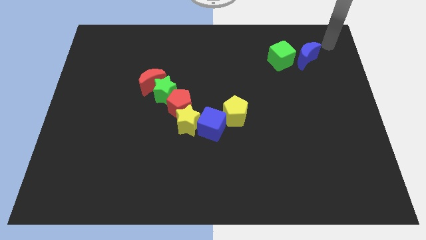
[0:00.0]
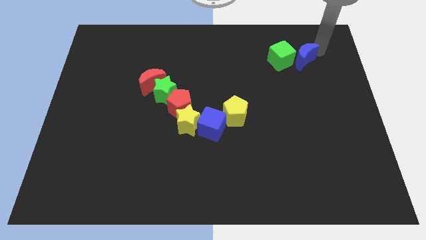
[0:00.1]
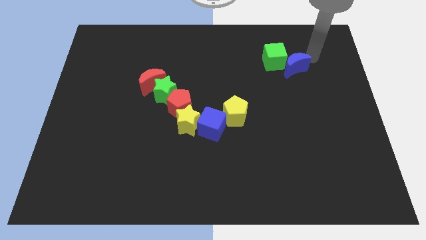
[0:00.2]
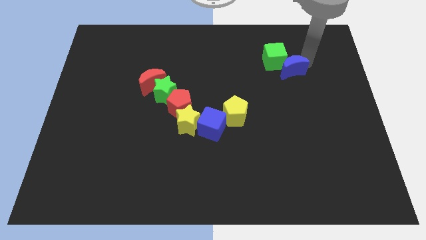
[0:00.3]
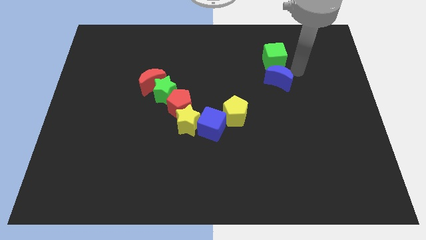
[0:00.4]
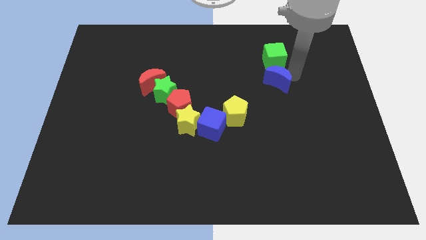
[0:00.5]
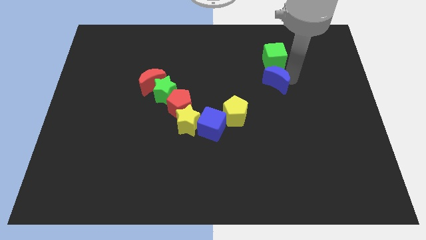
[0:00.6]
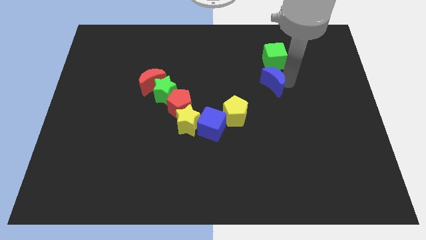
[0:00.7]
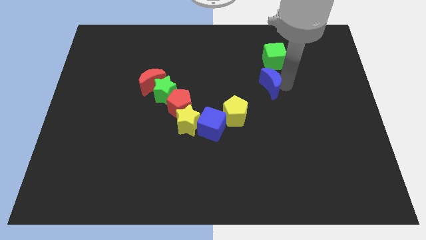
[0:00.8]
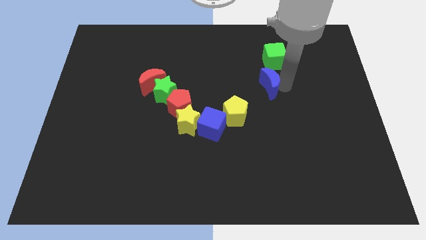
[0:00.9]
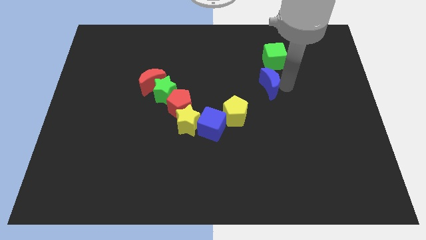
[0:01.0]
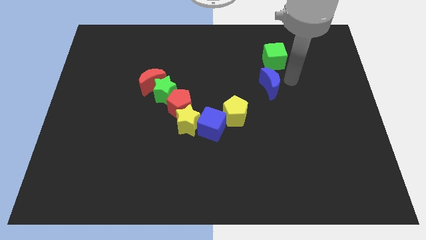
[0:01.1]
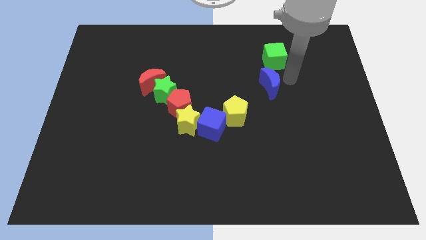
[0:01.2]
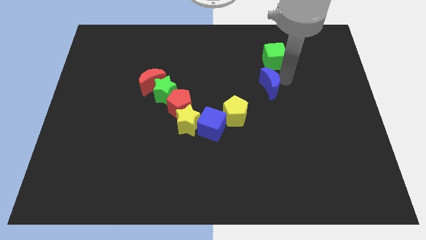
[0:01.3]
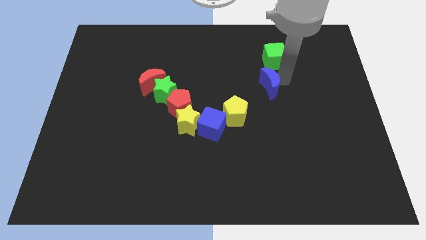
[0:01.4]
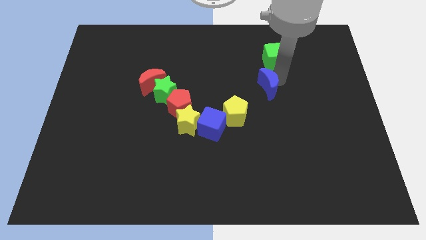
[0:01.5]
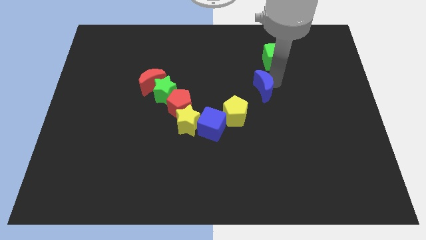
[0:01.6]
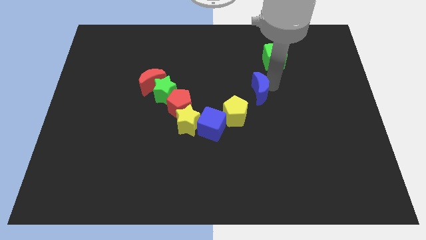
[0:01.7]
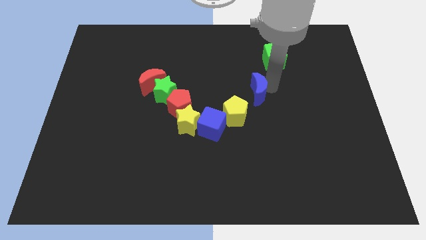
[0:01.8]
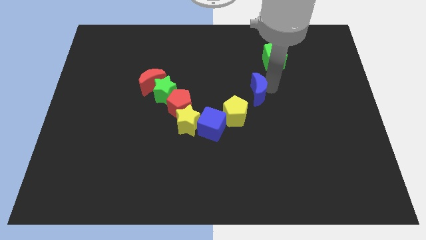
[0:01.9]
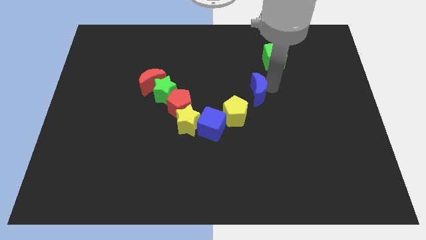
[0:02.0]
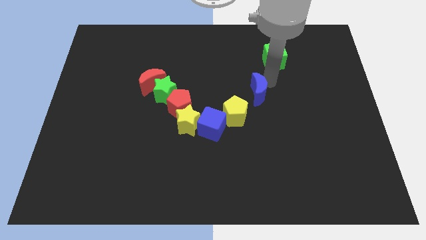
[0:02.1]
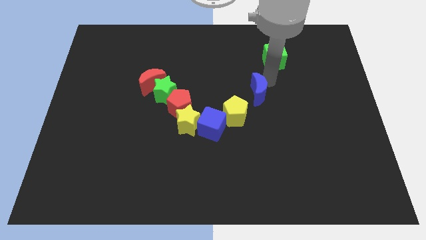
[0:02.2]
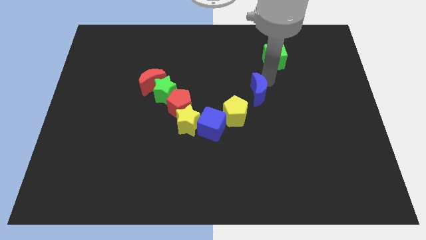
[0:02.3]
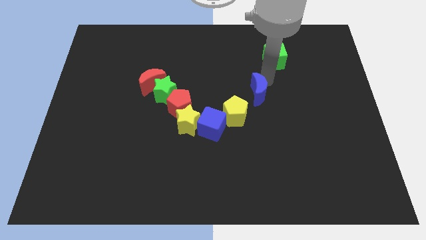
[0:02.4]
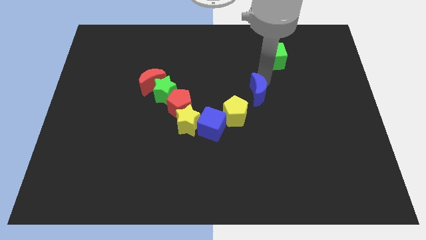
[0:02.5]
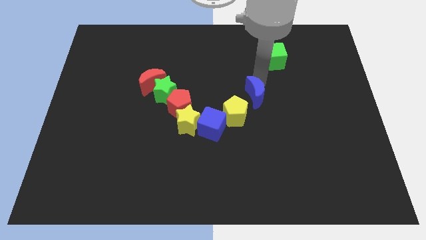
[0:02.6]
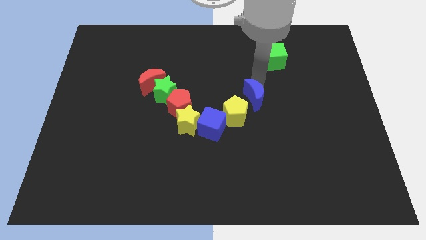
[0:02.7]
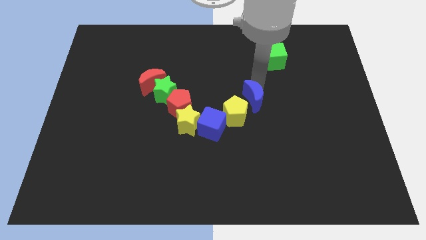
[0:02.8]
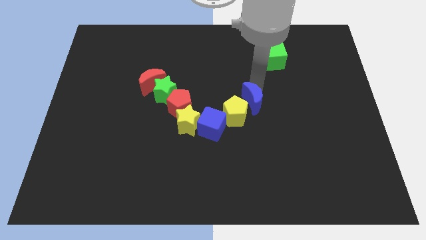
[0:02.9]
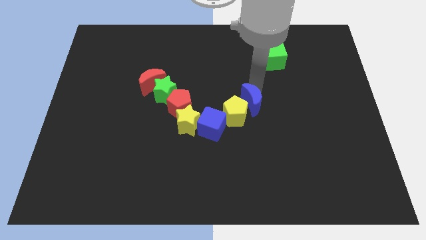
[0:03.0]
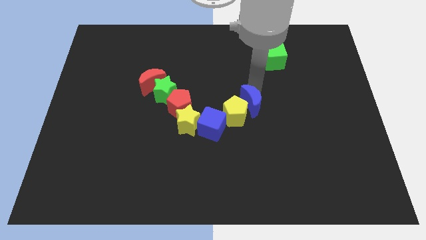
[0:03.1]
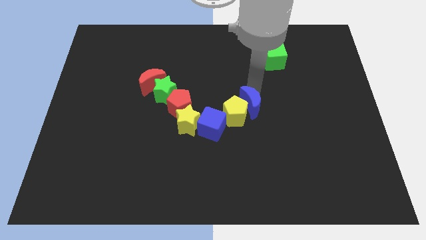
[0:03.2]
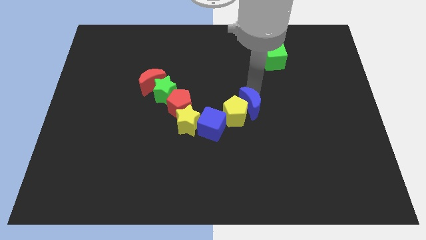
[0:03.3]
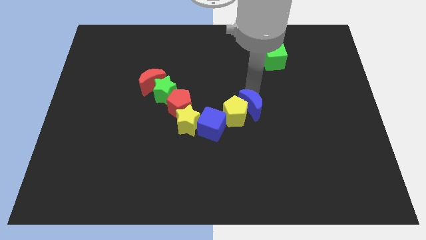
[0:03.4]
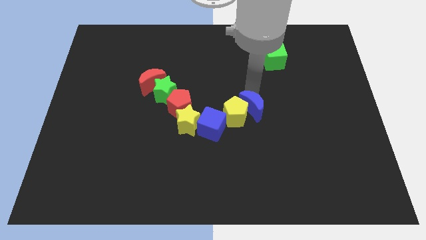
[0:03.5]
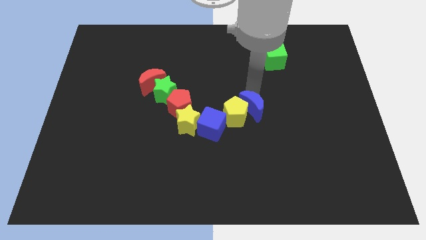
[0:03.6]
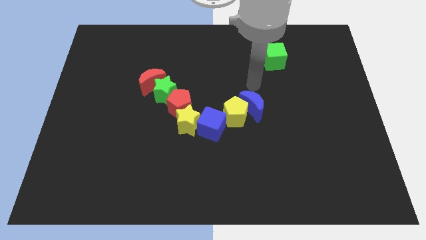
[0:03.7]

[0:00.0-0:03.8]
move the blue crescent right to the yellow pentagon

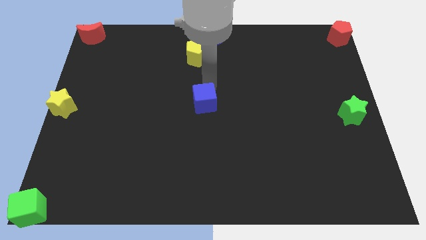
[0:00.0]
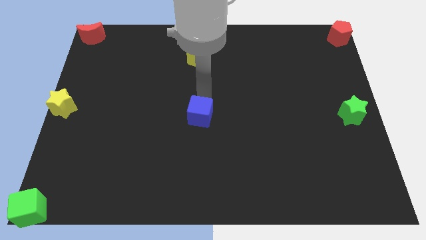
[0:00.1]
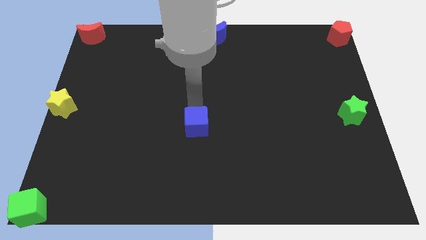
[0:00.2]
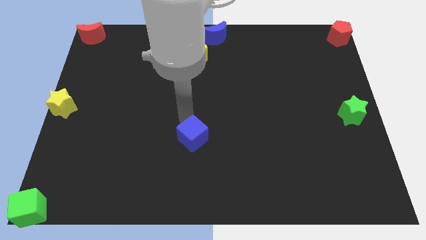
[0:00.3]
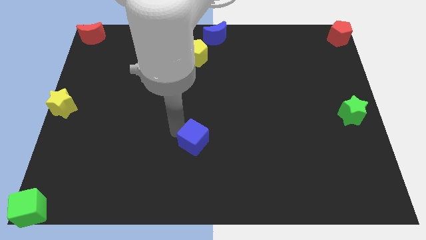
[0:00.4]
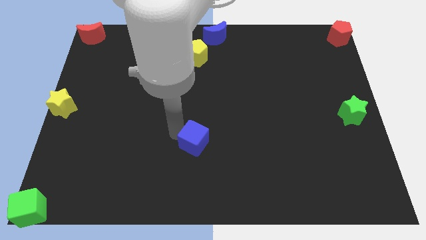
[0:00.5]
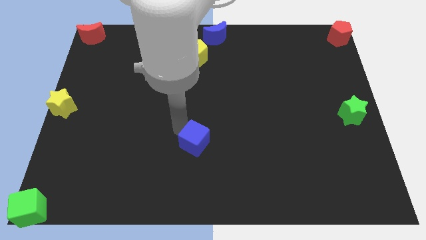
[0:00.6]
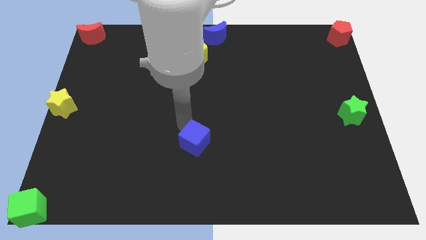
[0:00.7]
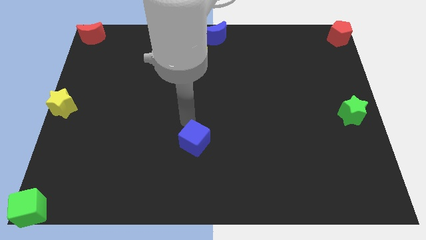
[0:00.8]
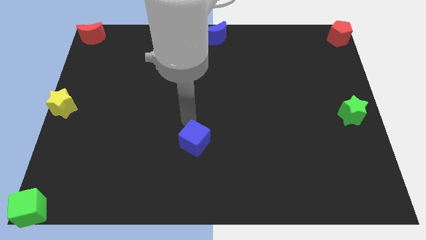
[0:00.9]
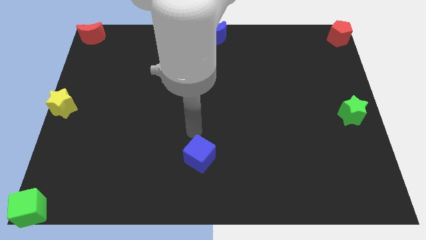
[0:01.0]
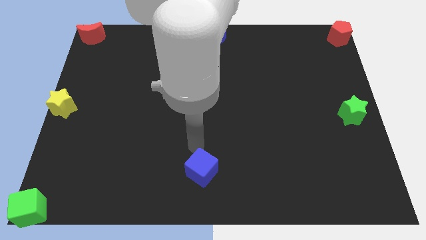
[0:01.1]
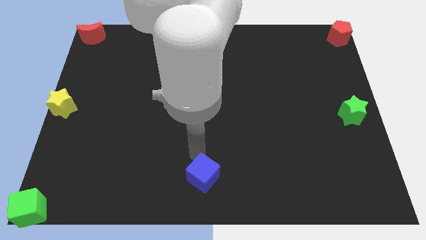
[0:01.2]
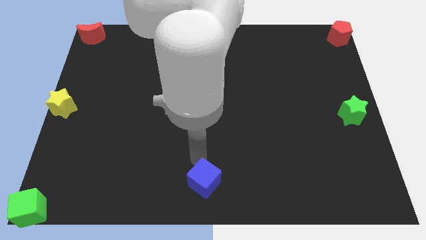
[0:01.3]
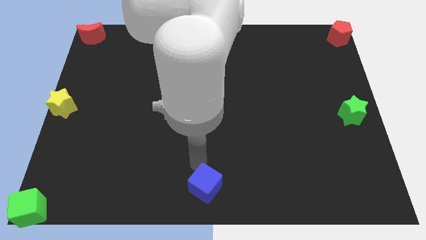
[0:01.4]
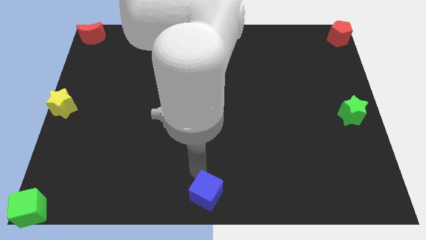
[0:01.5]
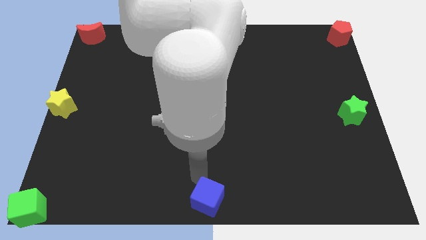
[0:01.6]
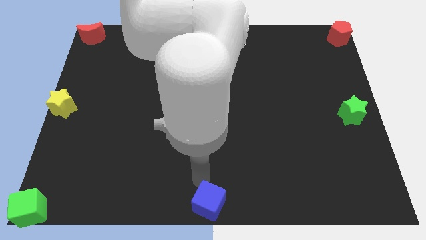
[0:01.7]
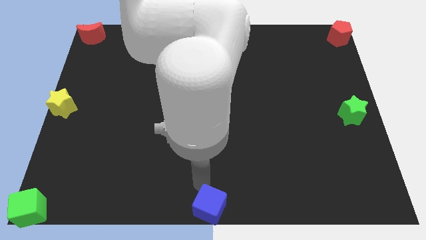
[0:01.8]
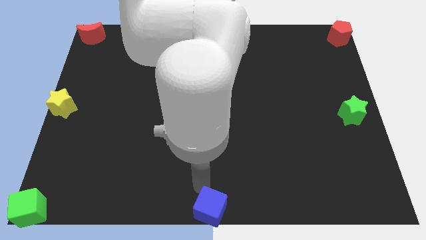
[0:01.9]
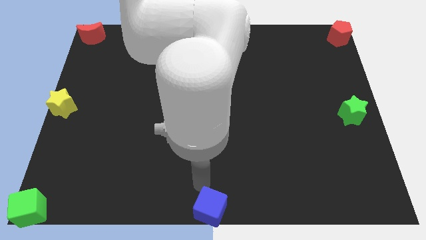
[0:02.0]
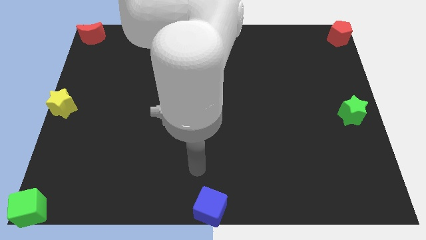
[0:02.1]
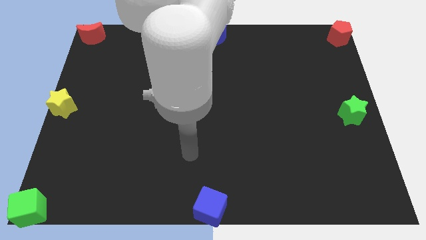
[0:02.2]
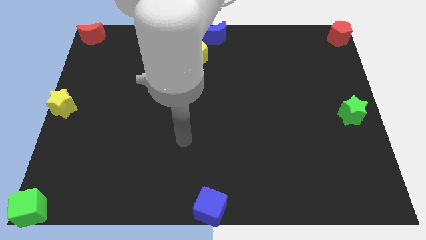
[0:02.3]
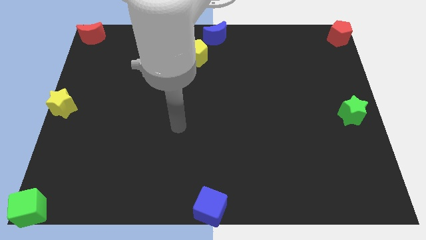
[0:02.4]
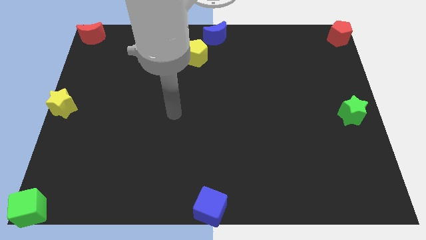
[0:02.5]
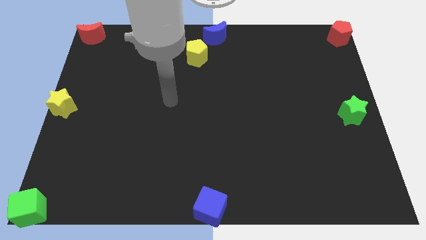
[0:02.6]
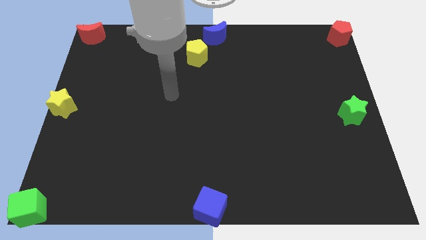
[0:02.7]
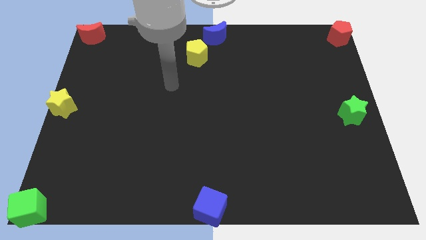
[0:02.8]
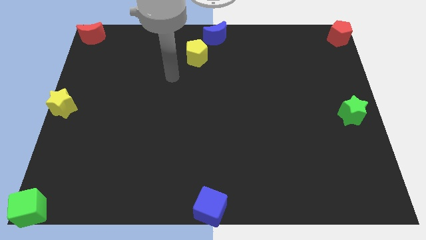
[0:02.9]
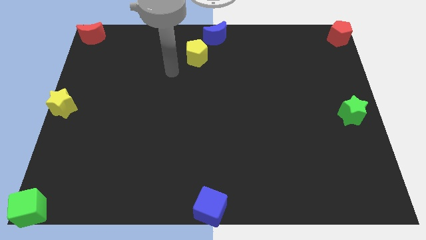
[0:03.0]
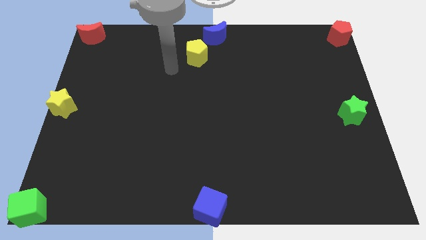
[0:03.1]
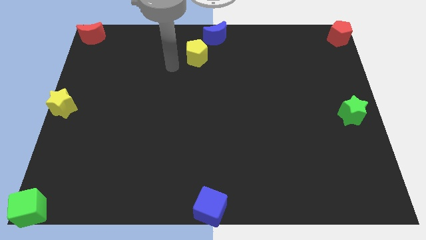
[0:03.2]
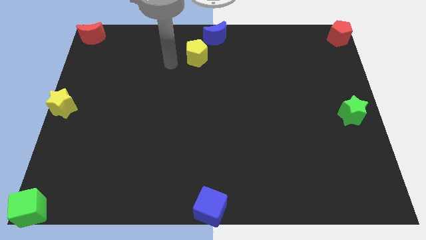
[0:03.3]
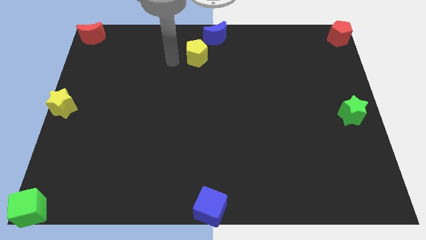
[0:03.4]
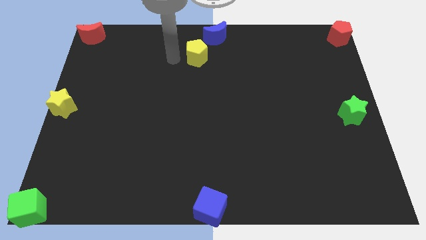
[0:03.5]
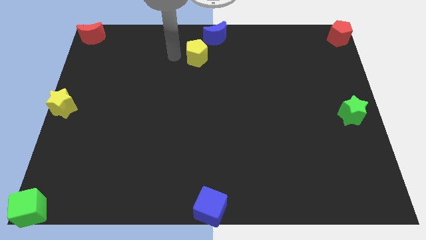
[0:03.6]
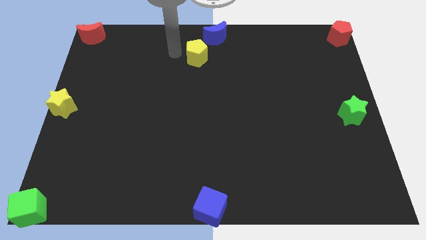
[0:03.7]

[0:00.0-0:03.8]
move the blue cube to the bottom center of the board

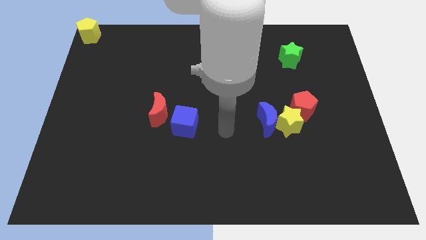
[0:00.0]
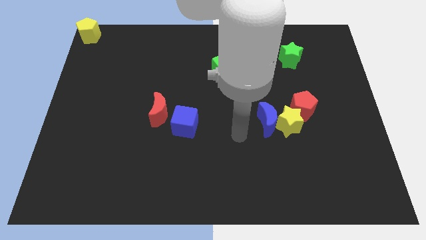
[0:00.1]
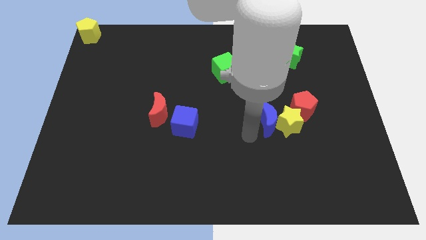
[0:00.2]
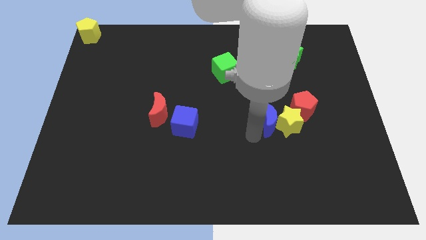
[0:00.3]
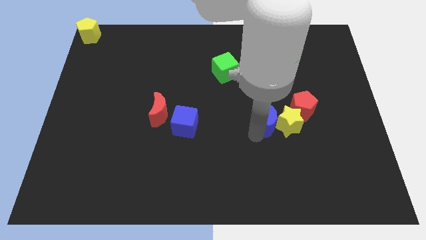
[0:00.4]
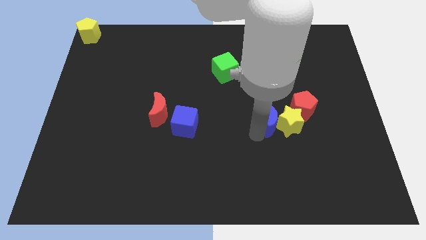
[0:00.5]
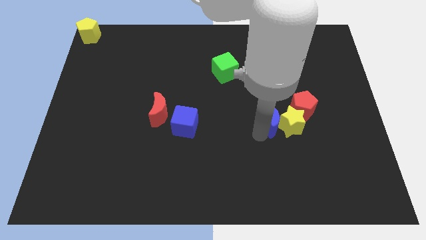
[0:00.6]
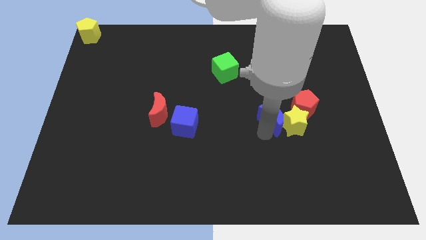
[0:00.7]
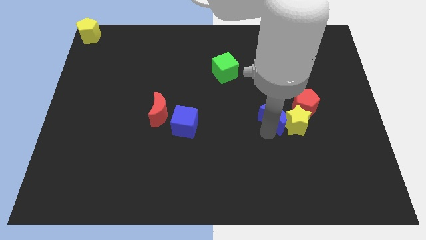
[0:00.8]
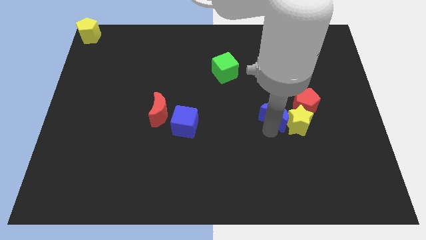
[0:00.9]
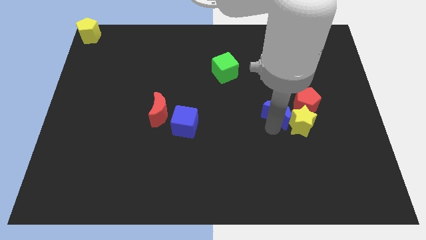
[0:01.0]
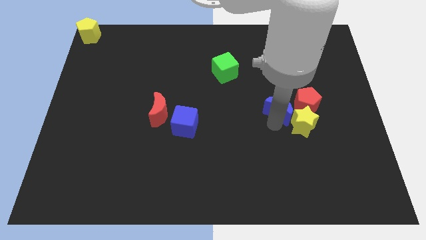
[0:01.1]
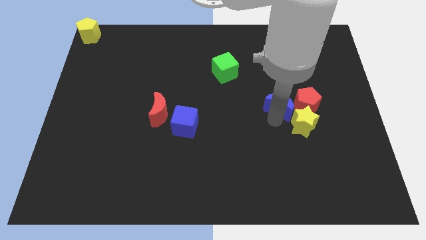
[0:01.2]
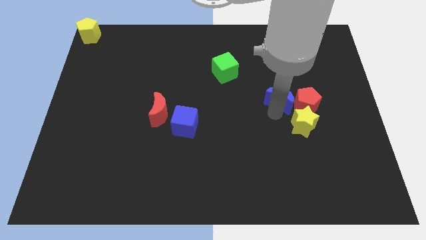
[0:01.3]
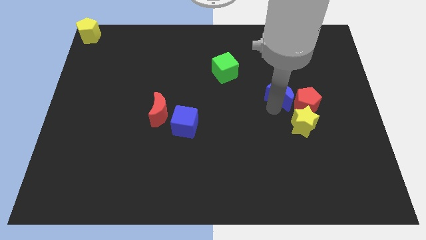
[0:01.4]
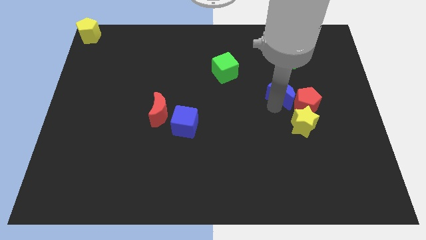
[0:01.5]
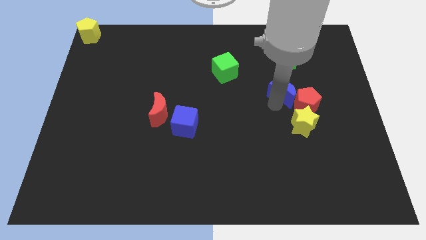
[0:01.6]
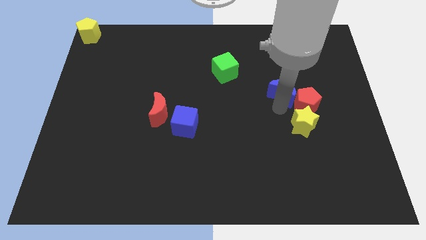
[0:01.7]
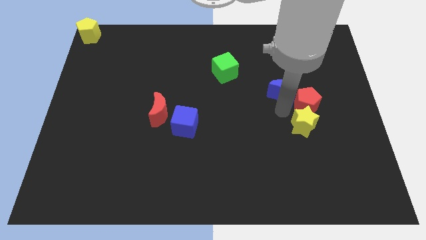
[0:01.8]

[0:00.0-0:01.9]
push the blue crescent to the left side of the red pentagon
